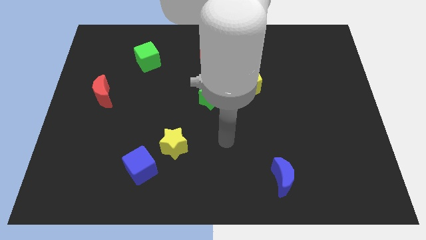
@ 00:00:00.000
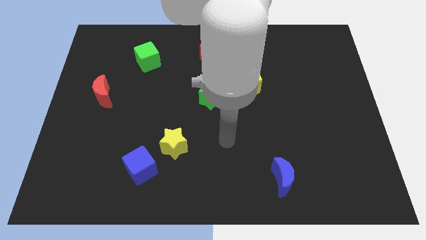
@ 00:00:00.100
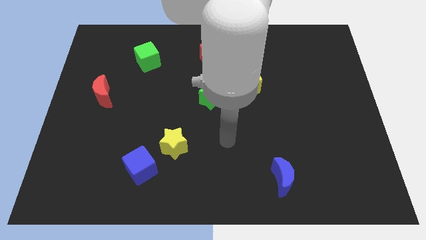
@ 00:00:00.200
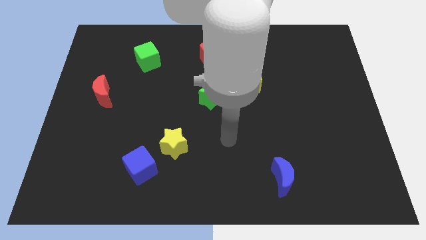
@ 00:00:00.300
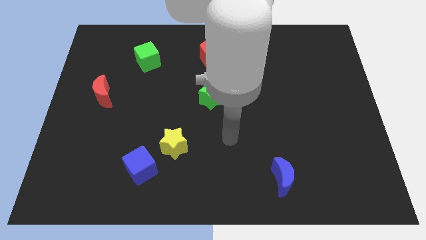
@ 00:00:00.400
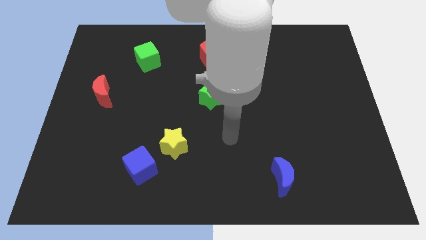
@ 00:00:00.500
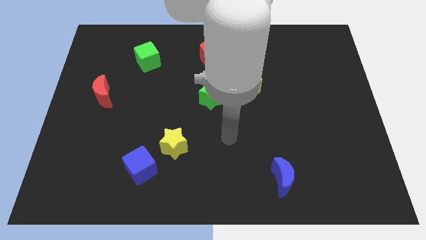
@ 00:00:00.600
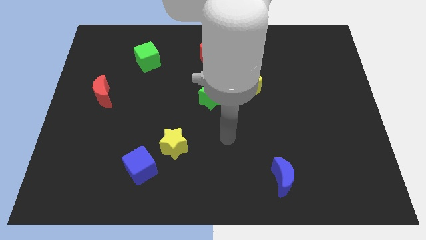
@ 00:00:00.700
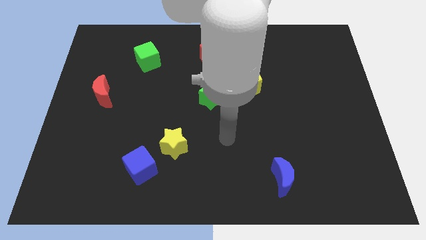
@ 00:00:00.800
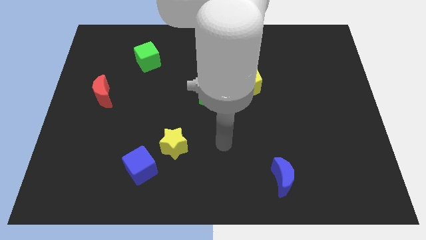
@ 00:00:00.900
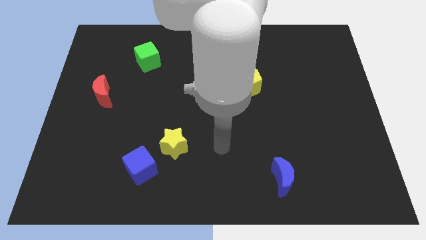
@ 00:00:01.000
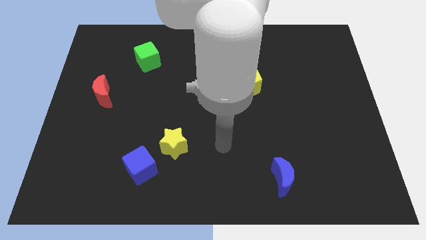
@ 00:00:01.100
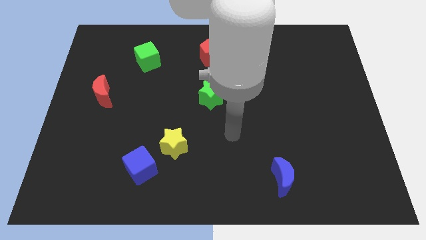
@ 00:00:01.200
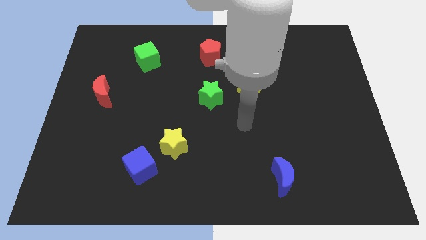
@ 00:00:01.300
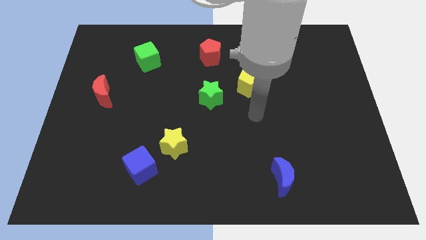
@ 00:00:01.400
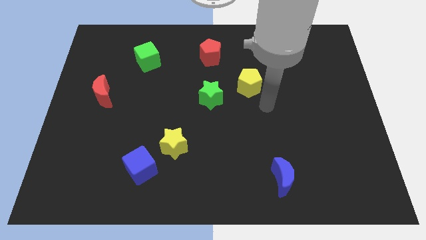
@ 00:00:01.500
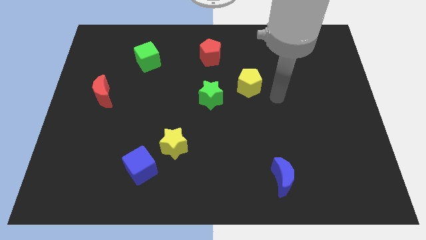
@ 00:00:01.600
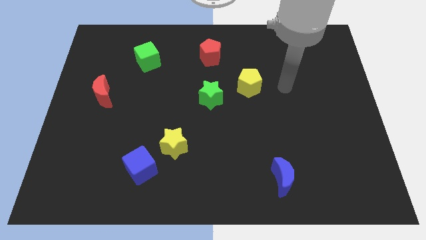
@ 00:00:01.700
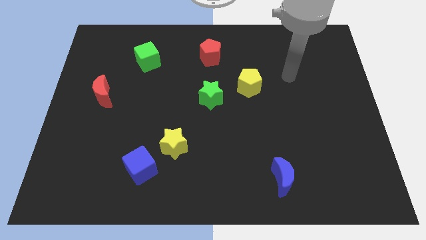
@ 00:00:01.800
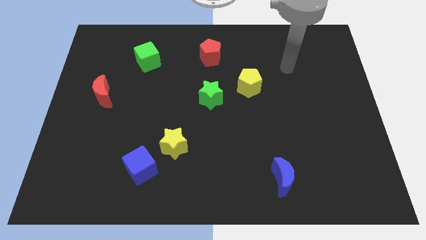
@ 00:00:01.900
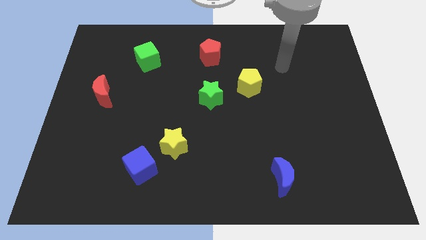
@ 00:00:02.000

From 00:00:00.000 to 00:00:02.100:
move your arm to the top right of the yellow pentagon

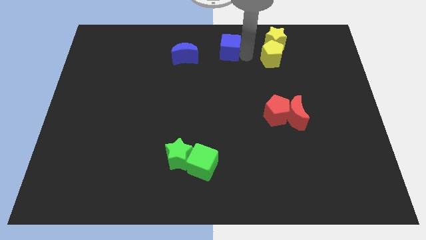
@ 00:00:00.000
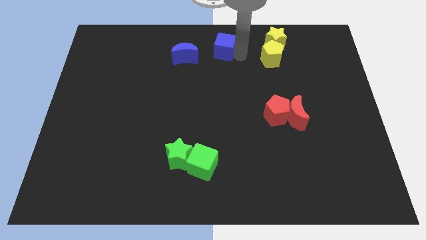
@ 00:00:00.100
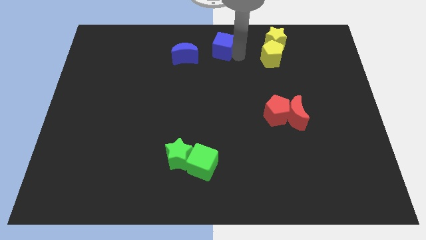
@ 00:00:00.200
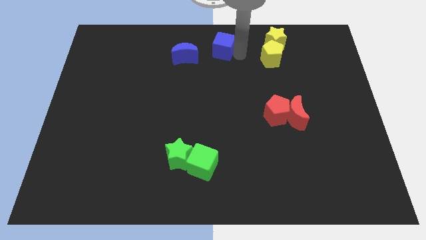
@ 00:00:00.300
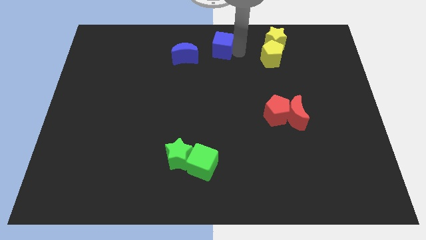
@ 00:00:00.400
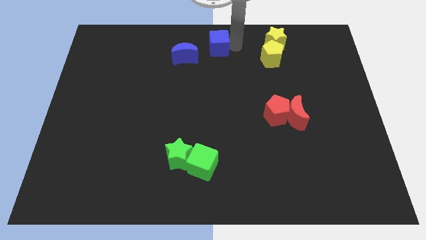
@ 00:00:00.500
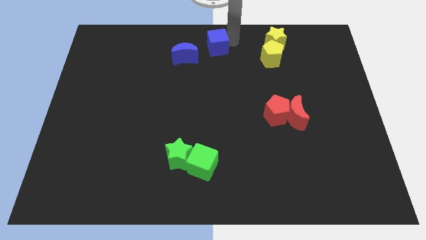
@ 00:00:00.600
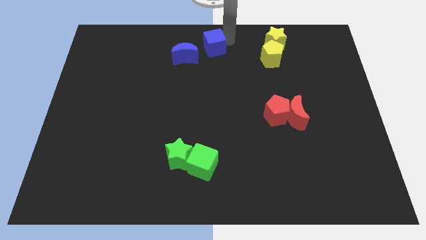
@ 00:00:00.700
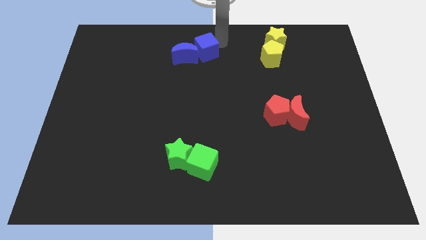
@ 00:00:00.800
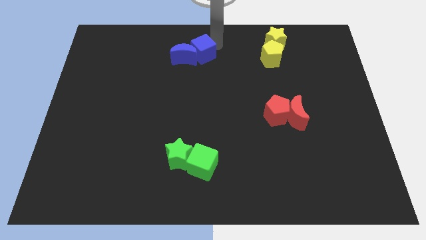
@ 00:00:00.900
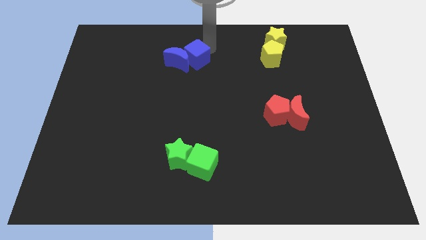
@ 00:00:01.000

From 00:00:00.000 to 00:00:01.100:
move the blue cube into the blue moon

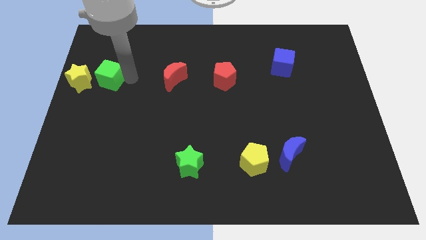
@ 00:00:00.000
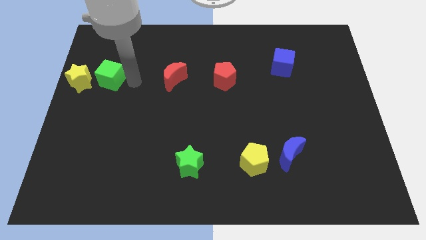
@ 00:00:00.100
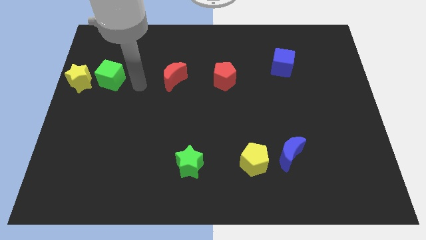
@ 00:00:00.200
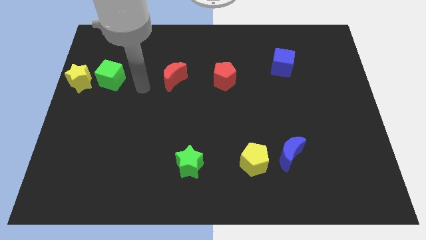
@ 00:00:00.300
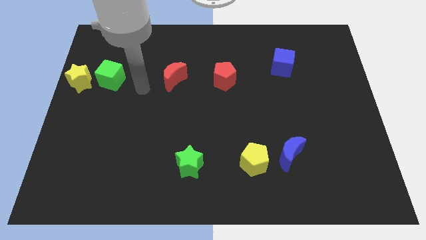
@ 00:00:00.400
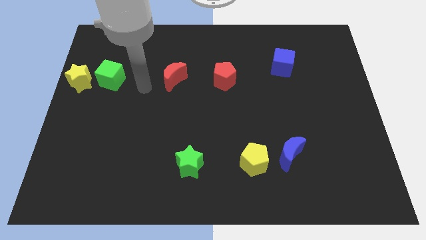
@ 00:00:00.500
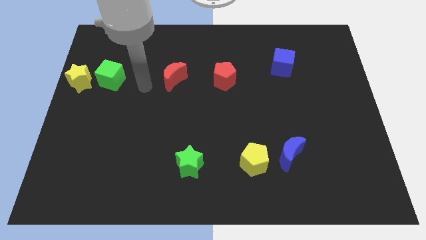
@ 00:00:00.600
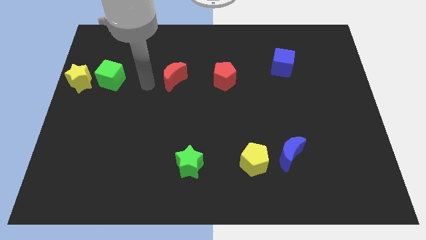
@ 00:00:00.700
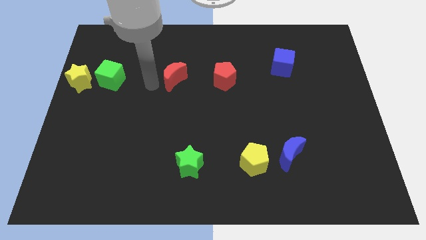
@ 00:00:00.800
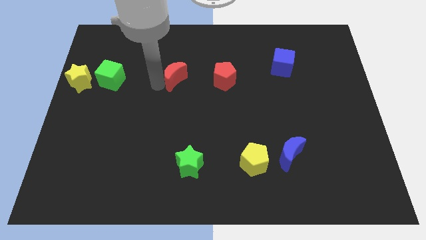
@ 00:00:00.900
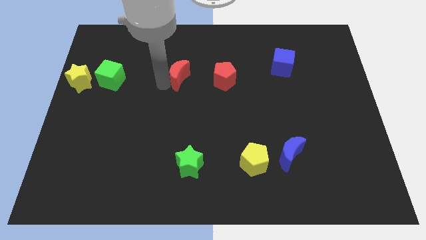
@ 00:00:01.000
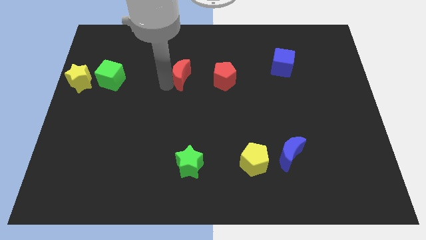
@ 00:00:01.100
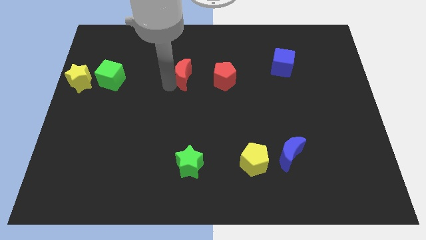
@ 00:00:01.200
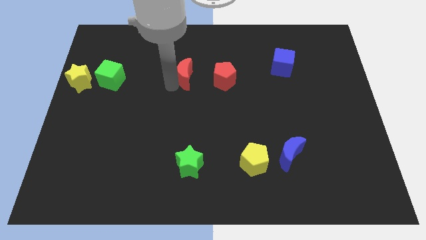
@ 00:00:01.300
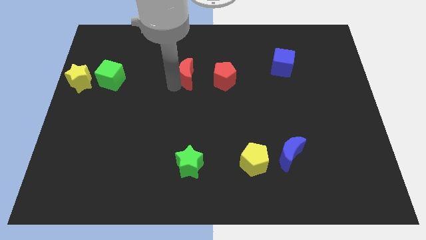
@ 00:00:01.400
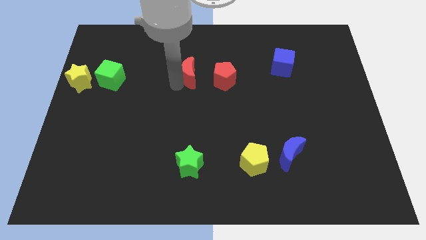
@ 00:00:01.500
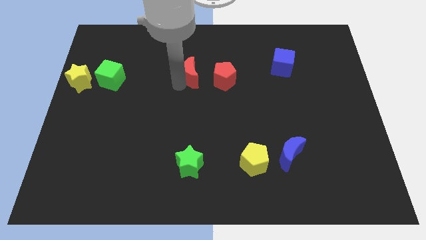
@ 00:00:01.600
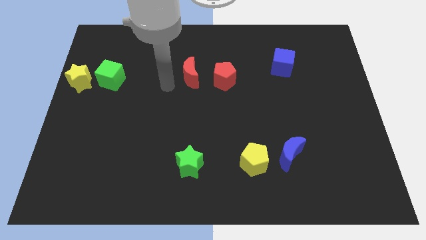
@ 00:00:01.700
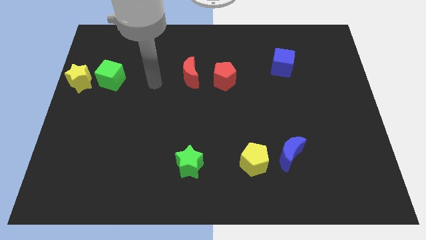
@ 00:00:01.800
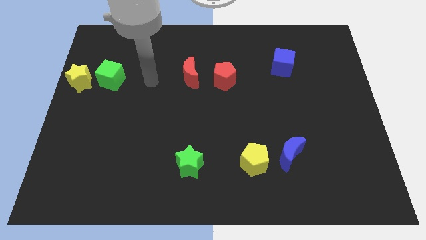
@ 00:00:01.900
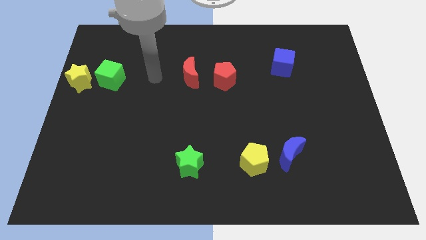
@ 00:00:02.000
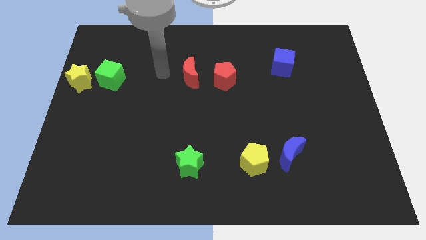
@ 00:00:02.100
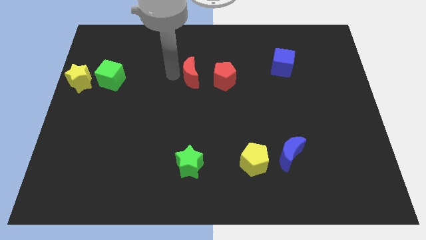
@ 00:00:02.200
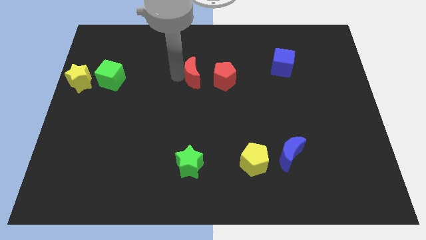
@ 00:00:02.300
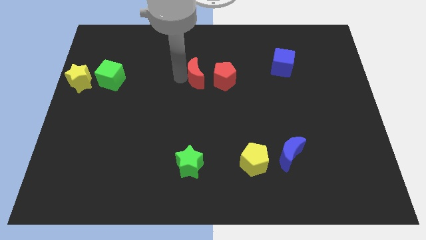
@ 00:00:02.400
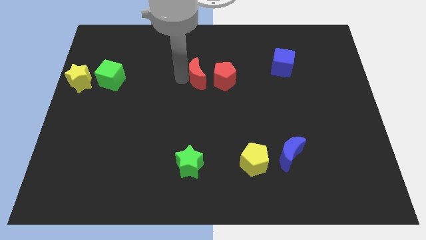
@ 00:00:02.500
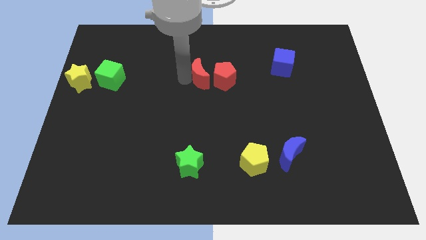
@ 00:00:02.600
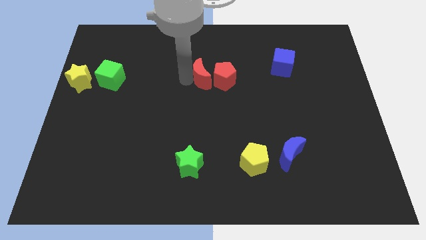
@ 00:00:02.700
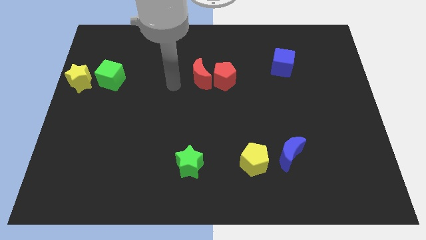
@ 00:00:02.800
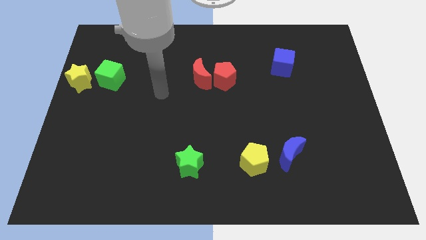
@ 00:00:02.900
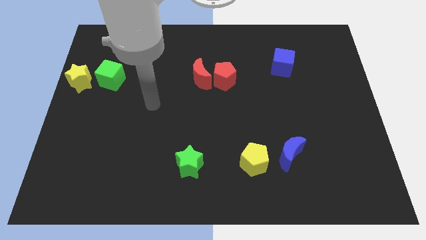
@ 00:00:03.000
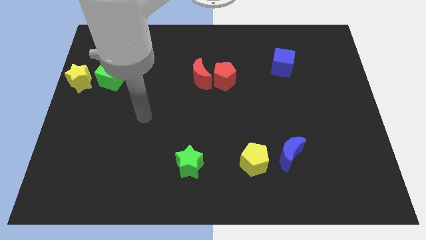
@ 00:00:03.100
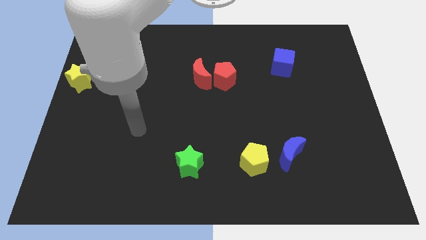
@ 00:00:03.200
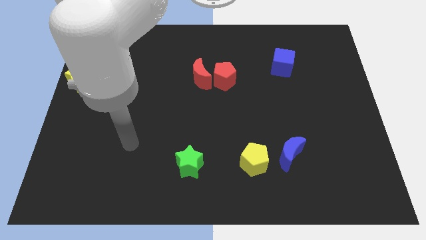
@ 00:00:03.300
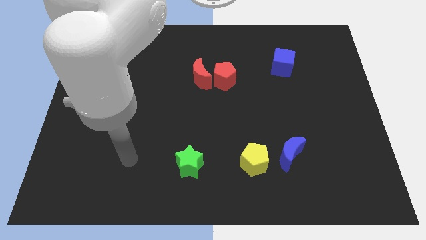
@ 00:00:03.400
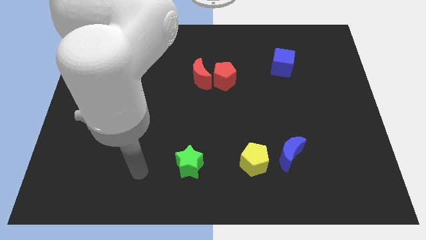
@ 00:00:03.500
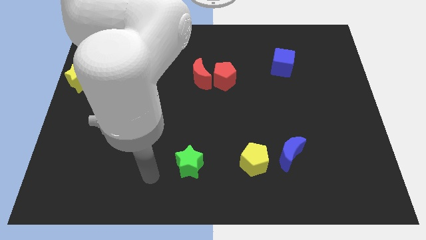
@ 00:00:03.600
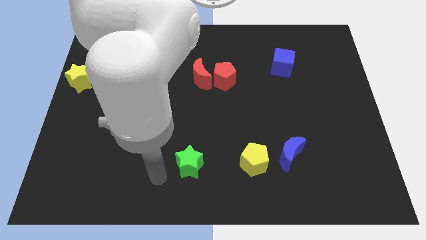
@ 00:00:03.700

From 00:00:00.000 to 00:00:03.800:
push the red crescent close to he red pentagon

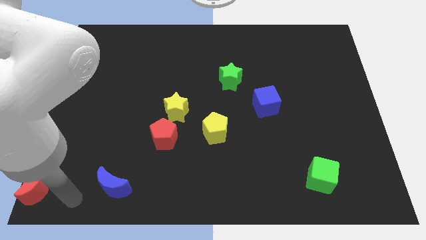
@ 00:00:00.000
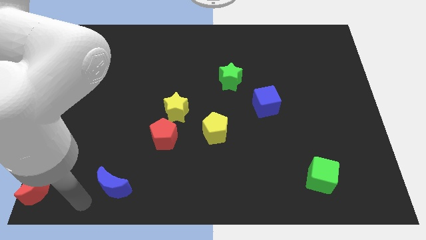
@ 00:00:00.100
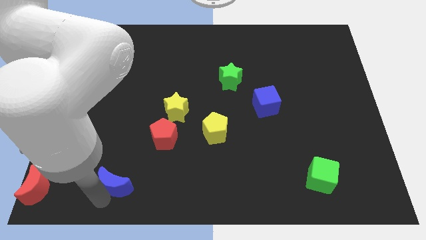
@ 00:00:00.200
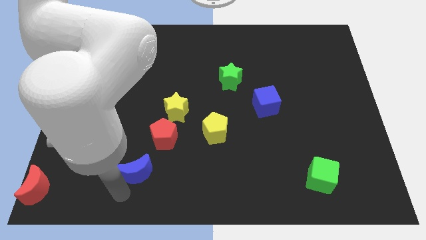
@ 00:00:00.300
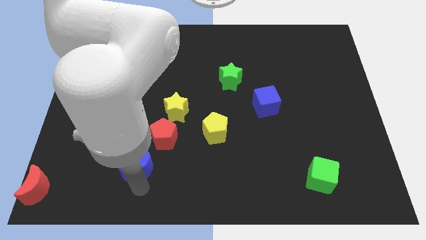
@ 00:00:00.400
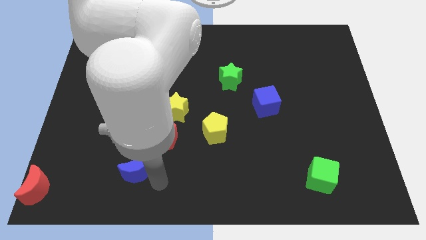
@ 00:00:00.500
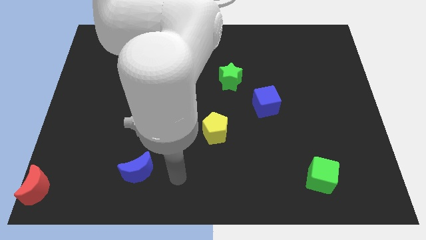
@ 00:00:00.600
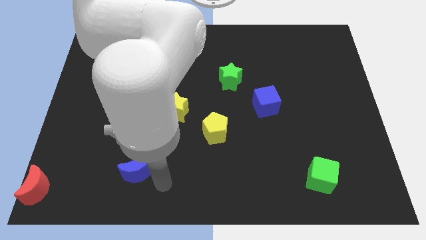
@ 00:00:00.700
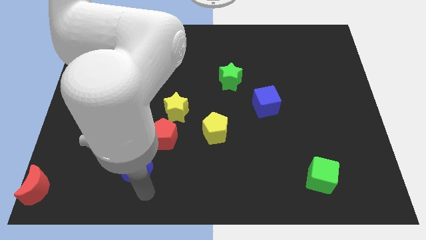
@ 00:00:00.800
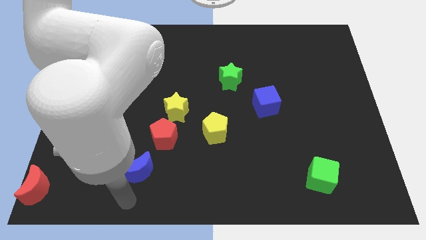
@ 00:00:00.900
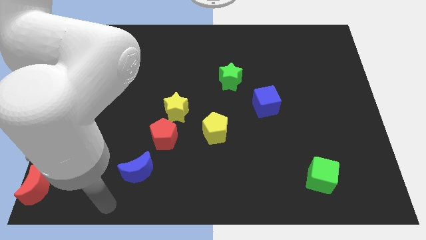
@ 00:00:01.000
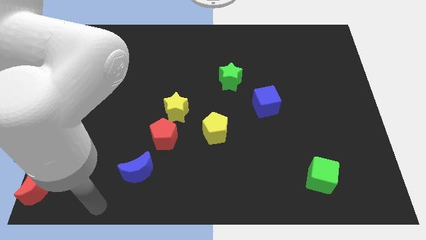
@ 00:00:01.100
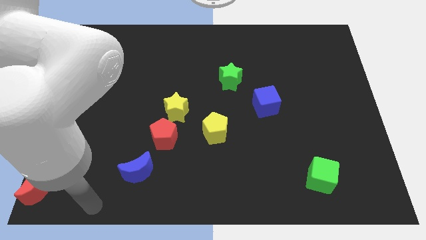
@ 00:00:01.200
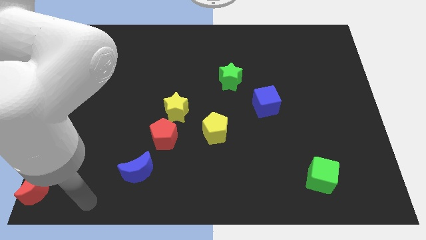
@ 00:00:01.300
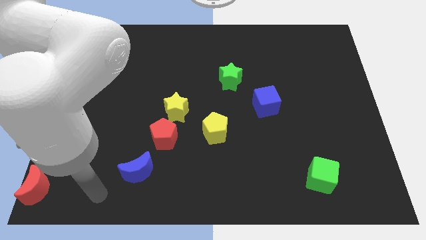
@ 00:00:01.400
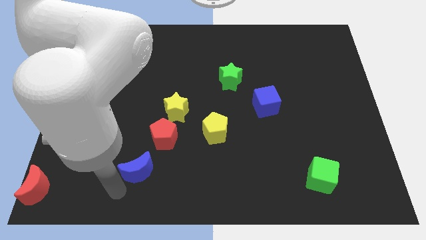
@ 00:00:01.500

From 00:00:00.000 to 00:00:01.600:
move the blue crescent to the bottom left side of the red pentagon

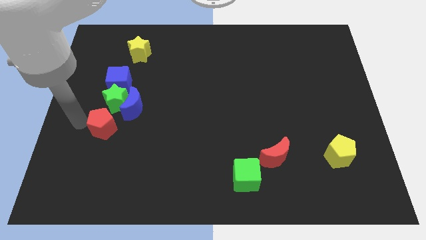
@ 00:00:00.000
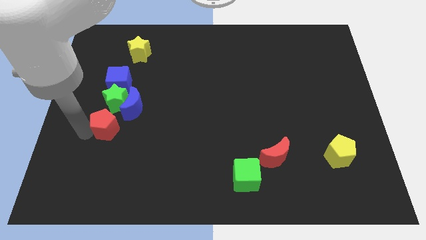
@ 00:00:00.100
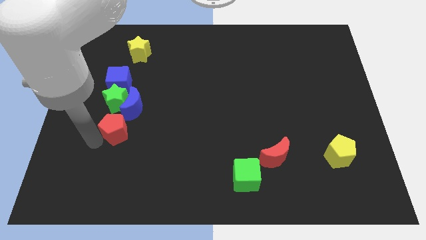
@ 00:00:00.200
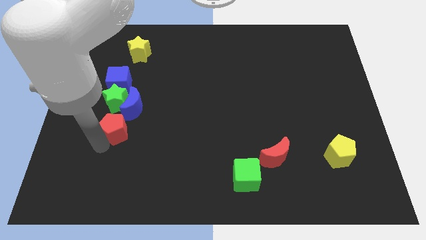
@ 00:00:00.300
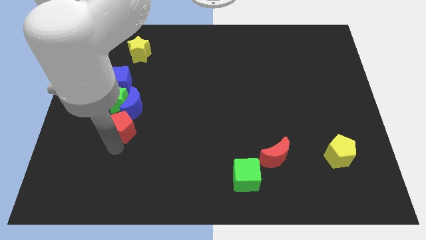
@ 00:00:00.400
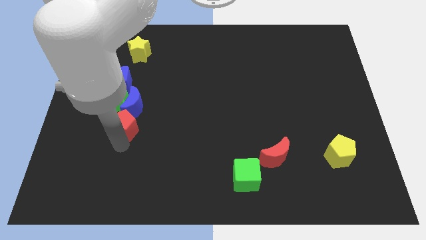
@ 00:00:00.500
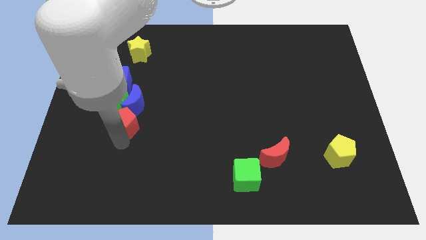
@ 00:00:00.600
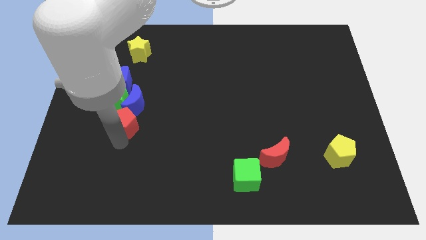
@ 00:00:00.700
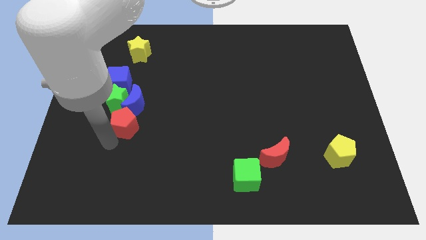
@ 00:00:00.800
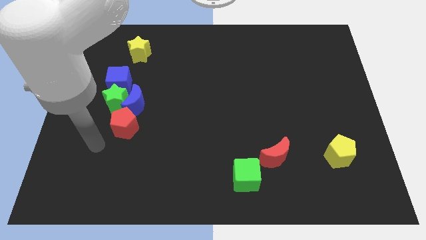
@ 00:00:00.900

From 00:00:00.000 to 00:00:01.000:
push red pentagon towards blue moon
